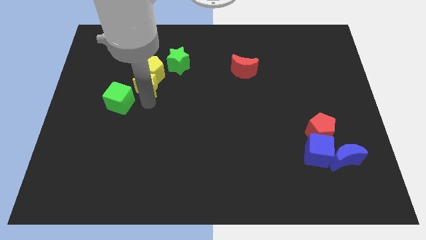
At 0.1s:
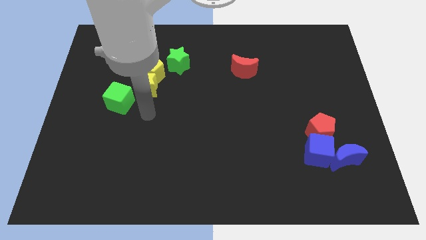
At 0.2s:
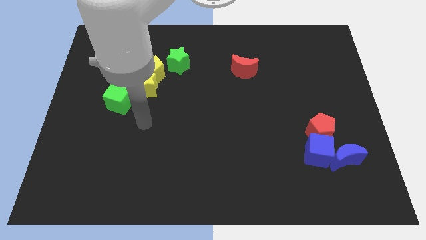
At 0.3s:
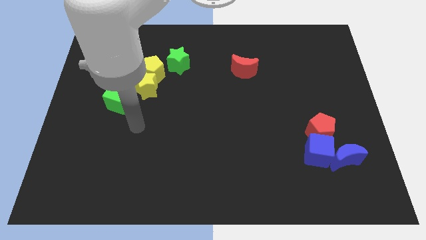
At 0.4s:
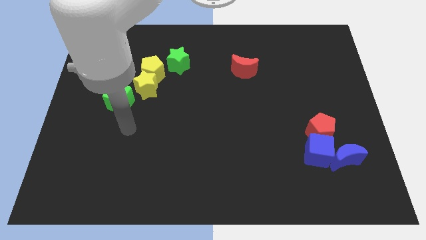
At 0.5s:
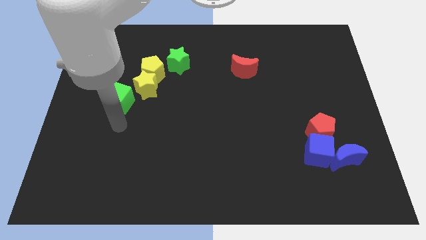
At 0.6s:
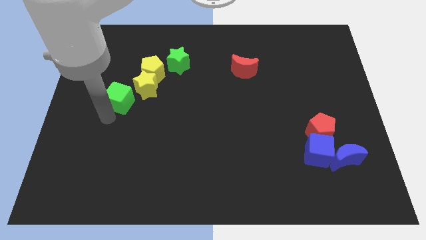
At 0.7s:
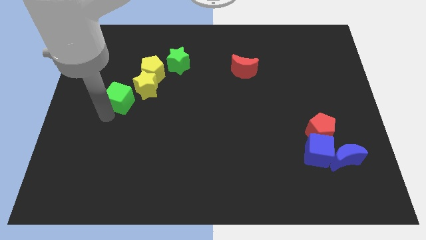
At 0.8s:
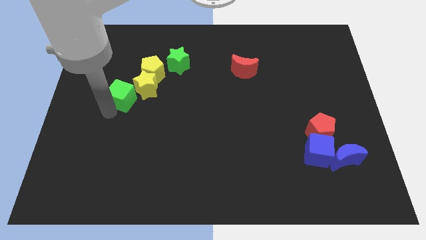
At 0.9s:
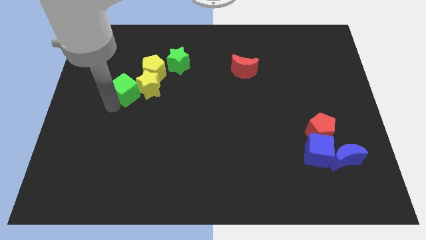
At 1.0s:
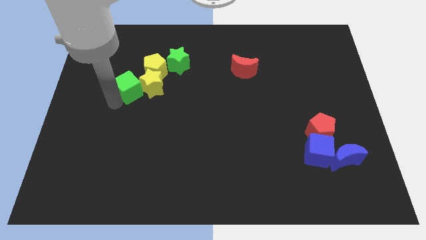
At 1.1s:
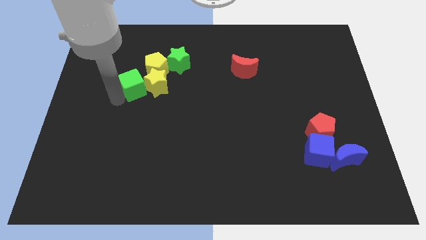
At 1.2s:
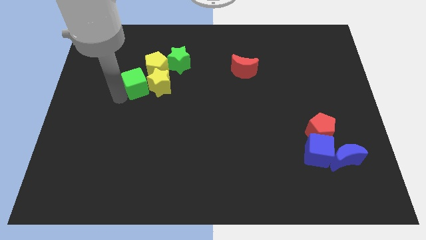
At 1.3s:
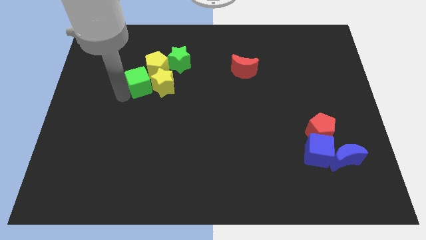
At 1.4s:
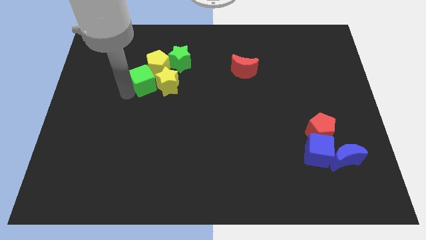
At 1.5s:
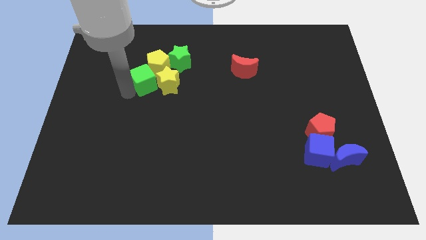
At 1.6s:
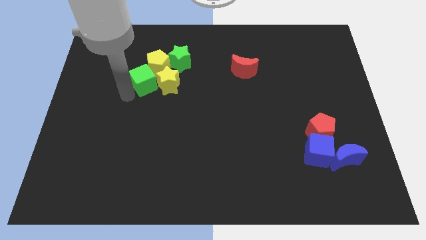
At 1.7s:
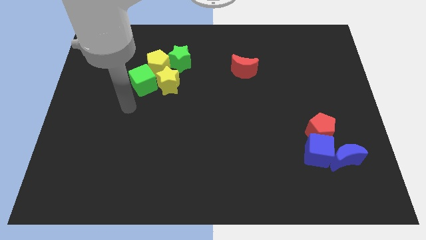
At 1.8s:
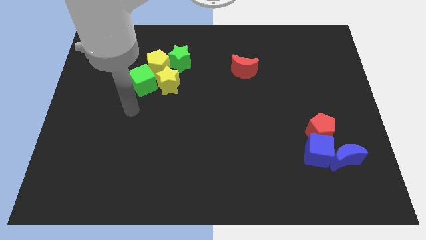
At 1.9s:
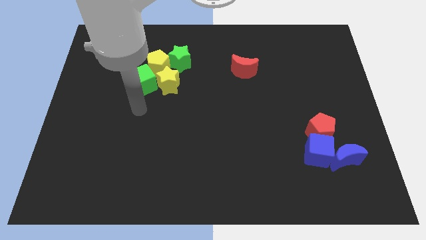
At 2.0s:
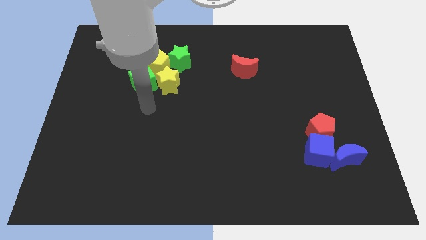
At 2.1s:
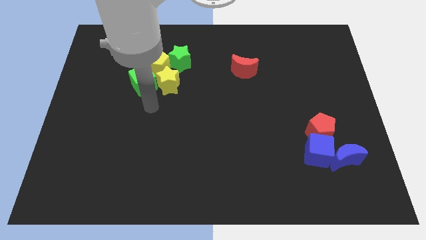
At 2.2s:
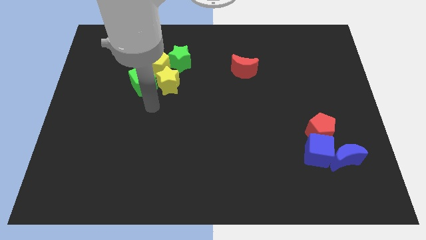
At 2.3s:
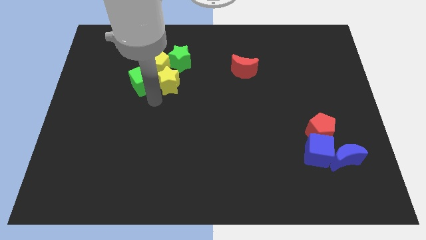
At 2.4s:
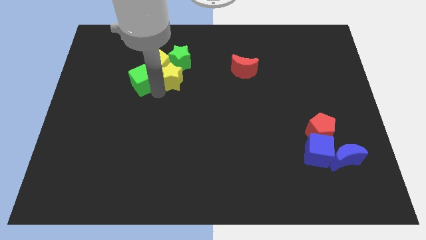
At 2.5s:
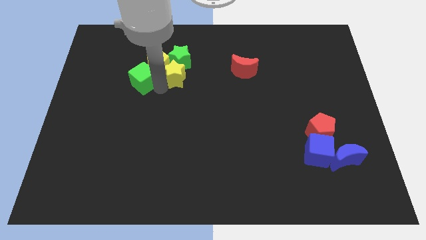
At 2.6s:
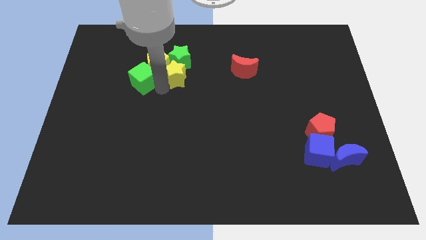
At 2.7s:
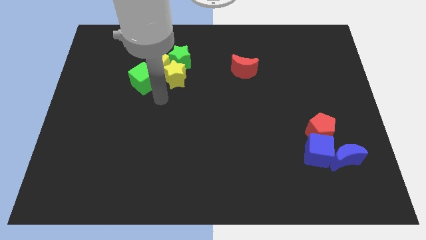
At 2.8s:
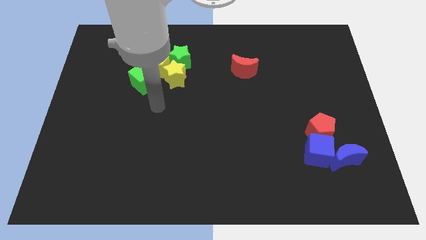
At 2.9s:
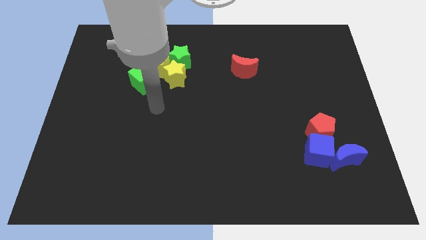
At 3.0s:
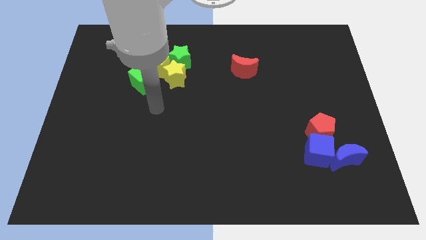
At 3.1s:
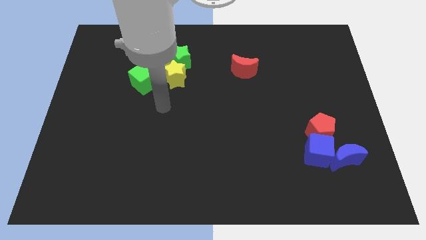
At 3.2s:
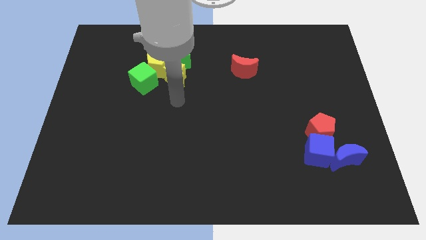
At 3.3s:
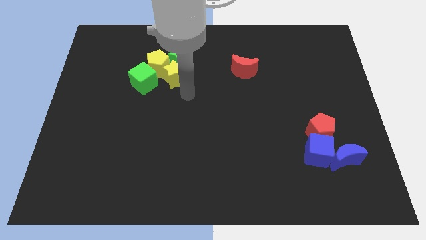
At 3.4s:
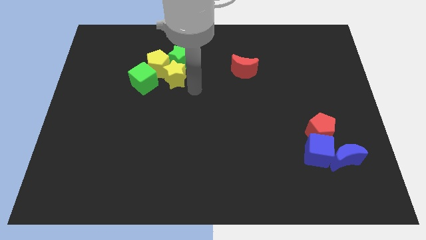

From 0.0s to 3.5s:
move yellow star below the green star

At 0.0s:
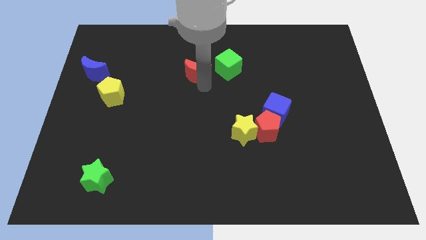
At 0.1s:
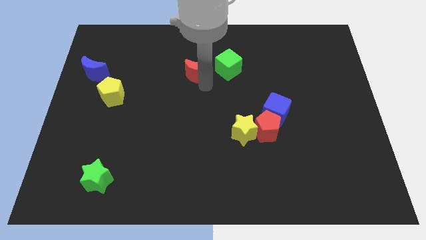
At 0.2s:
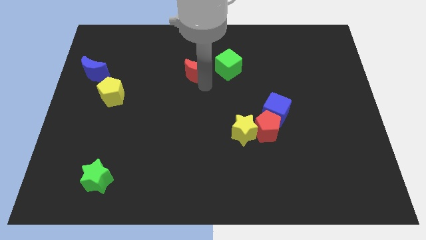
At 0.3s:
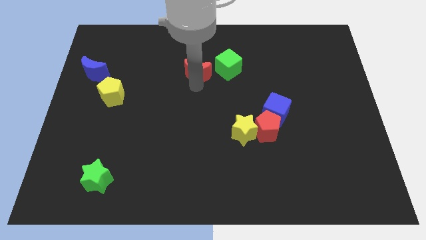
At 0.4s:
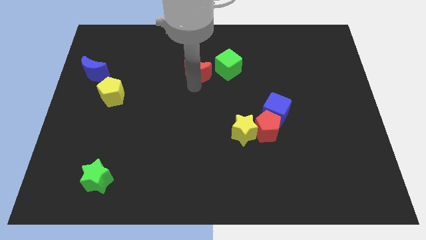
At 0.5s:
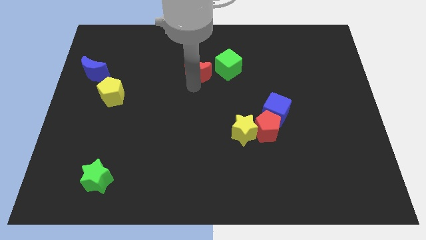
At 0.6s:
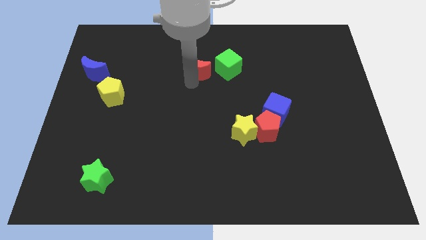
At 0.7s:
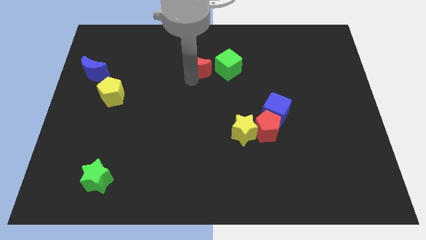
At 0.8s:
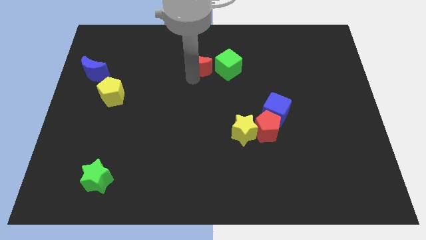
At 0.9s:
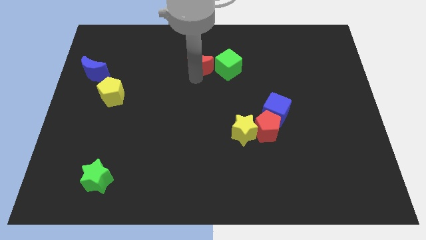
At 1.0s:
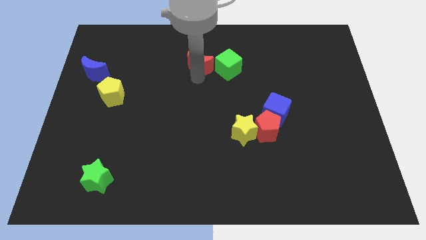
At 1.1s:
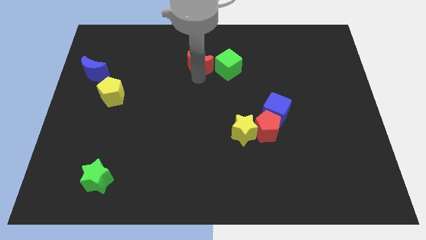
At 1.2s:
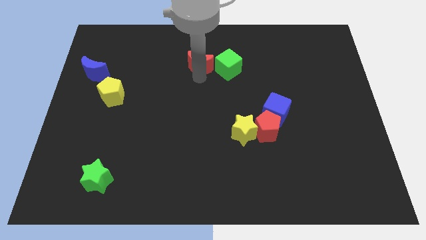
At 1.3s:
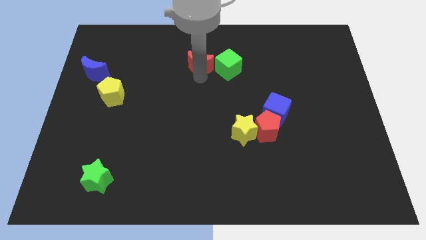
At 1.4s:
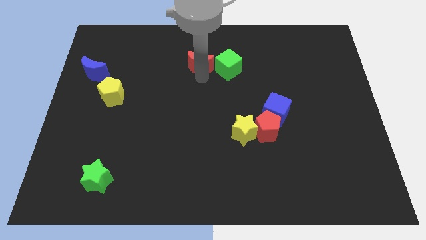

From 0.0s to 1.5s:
move the red crescent close to the green cube

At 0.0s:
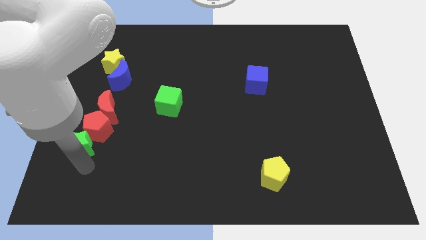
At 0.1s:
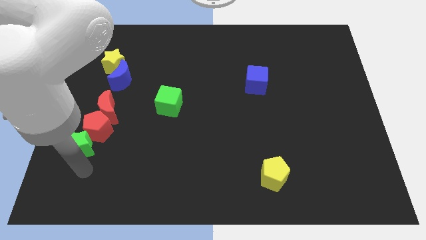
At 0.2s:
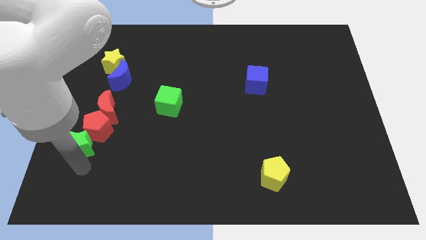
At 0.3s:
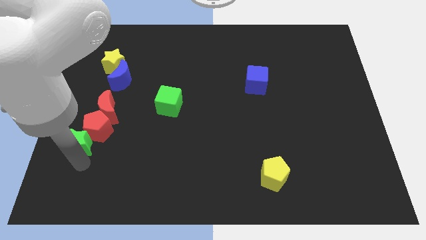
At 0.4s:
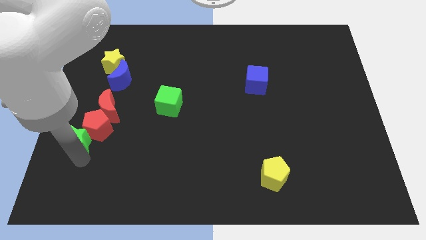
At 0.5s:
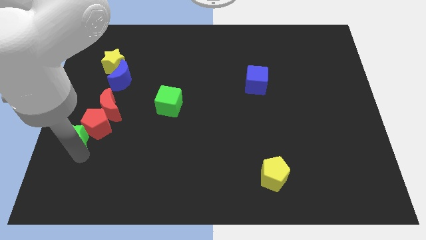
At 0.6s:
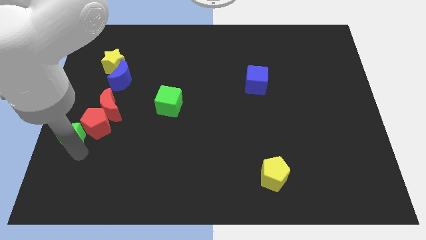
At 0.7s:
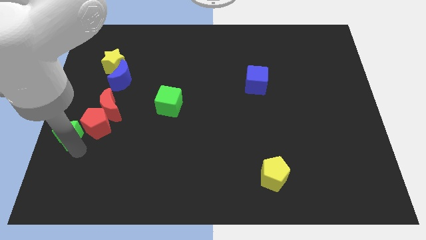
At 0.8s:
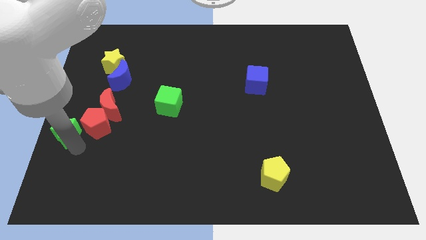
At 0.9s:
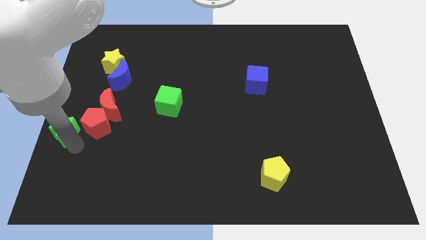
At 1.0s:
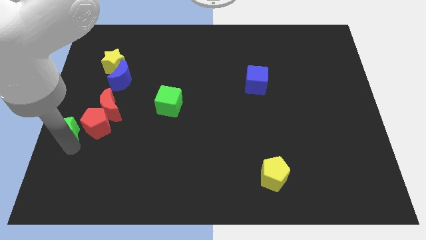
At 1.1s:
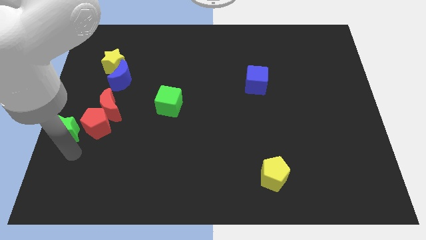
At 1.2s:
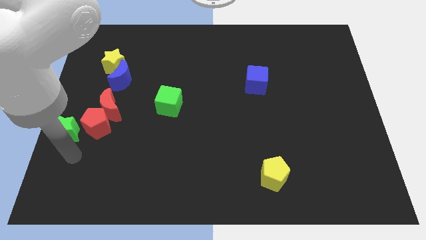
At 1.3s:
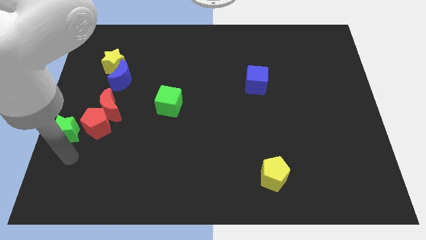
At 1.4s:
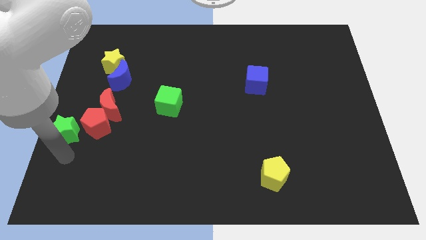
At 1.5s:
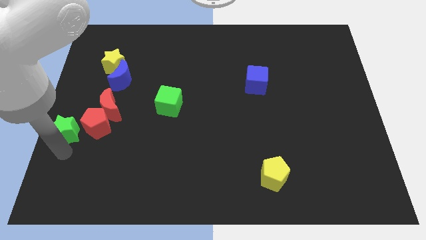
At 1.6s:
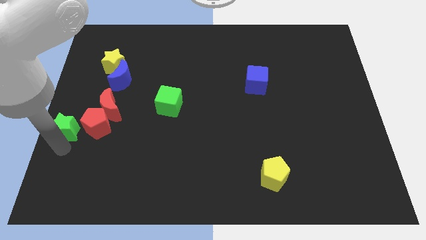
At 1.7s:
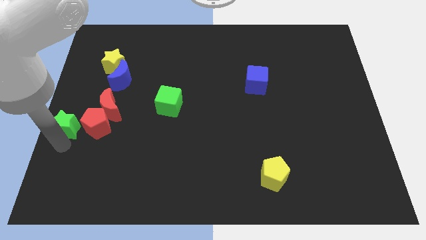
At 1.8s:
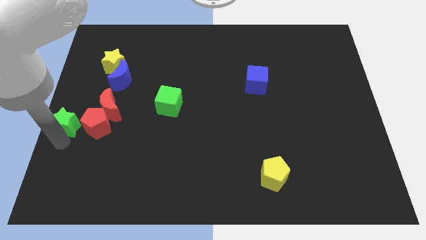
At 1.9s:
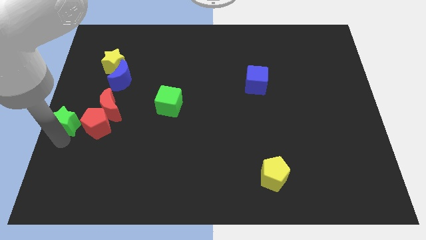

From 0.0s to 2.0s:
place the green star at the left side of the red pentagon

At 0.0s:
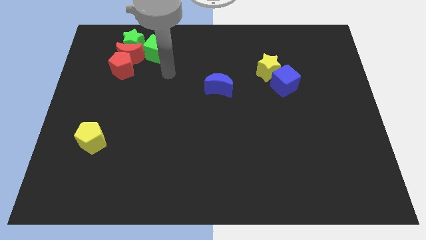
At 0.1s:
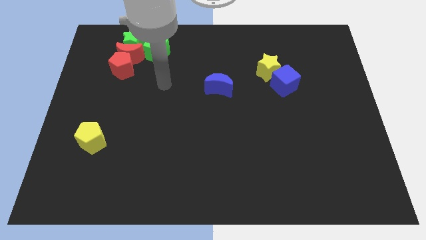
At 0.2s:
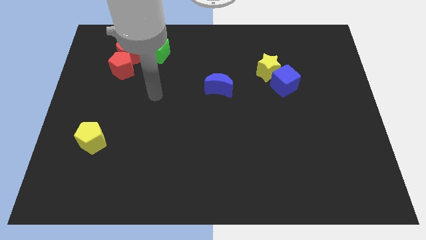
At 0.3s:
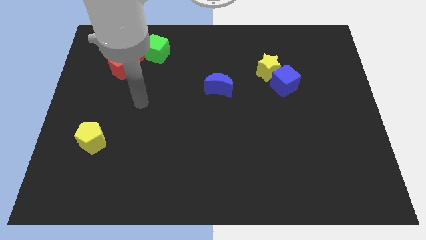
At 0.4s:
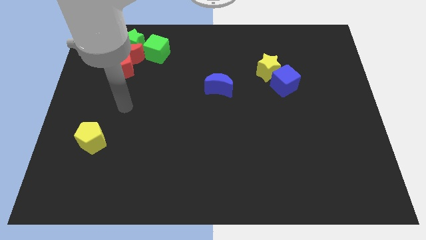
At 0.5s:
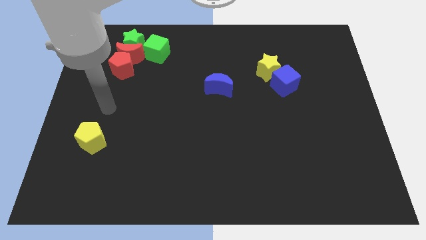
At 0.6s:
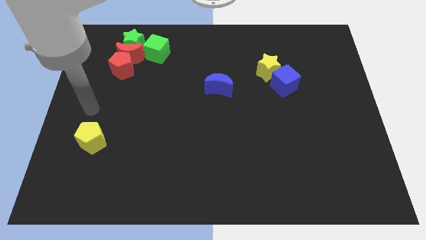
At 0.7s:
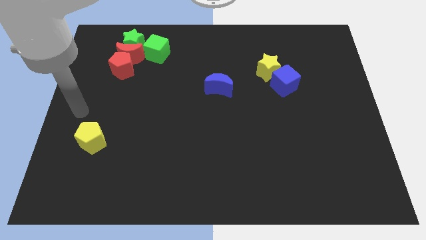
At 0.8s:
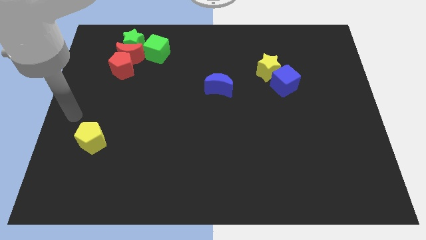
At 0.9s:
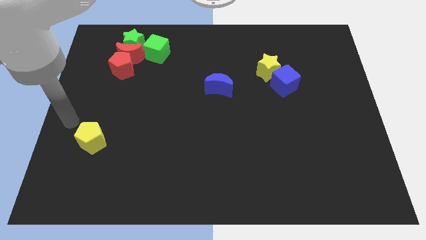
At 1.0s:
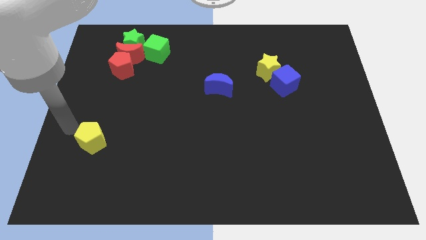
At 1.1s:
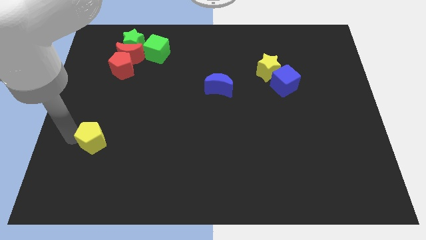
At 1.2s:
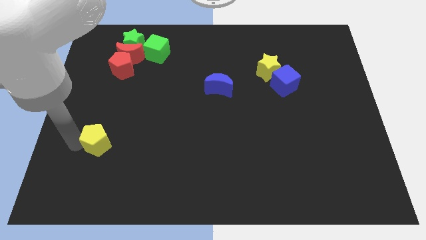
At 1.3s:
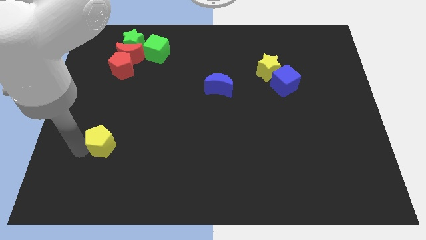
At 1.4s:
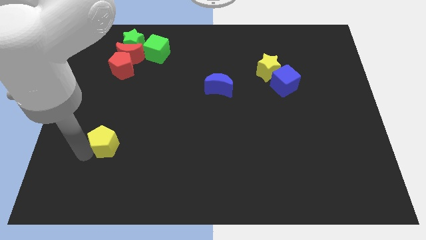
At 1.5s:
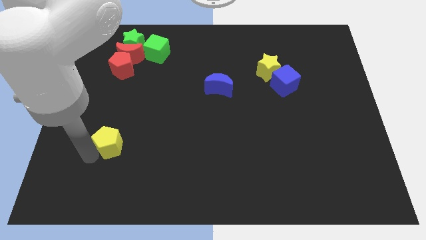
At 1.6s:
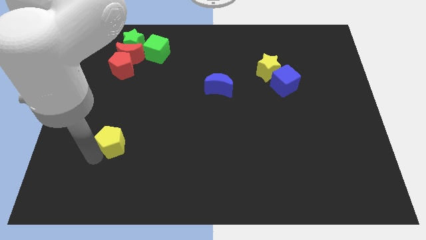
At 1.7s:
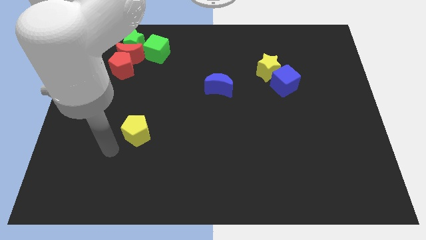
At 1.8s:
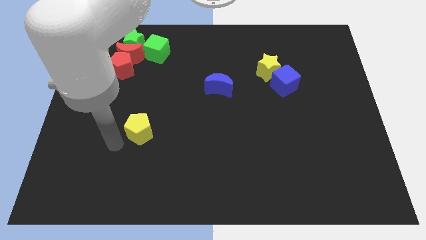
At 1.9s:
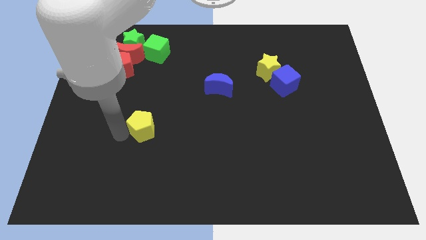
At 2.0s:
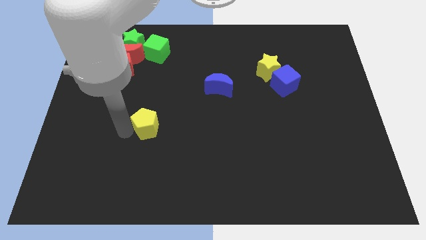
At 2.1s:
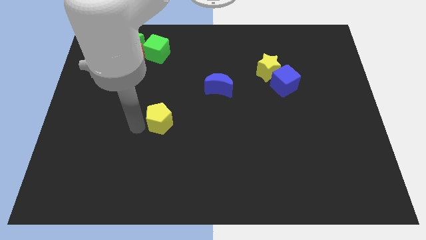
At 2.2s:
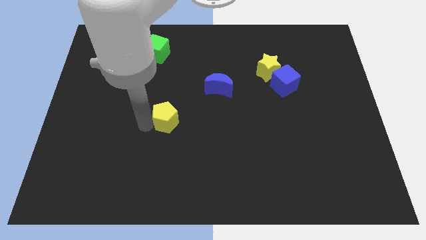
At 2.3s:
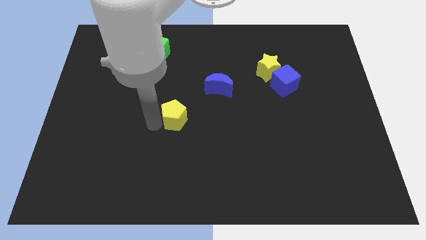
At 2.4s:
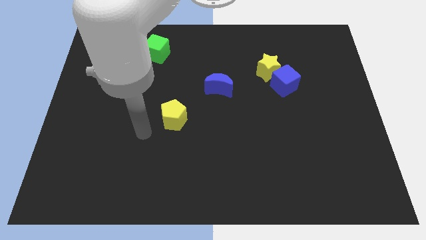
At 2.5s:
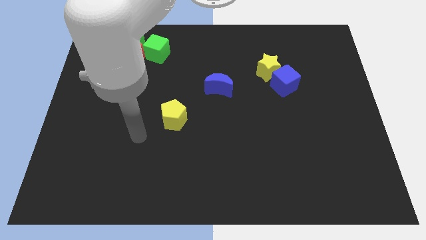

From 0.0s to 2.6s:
move the yellow pentagon diagonal to the blue moon
